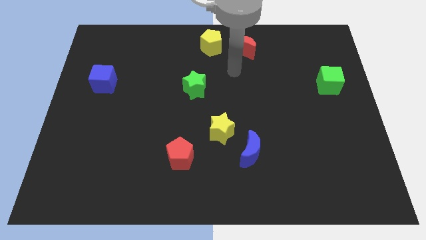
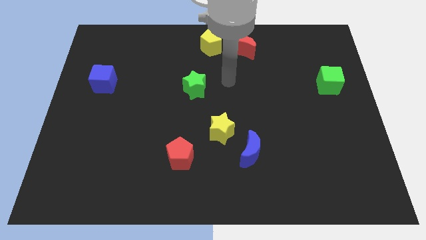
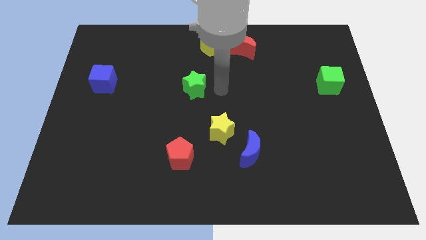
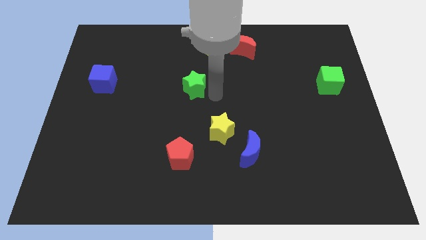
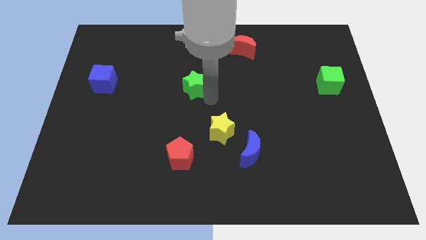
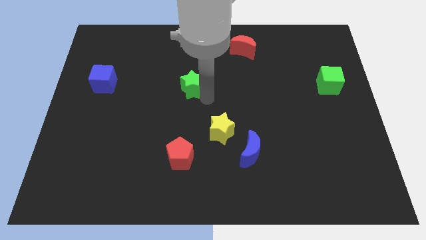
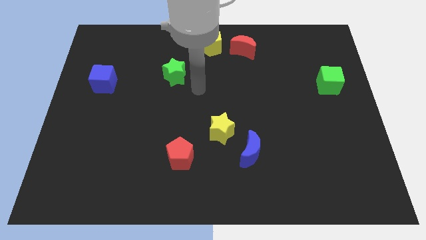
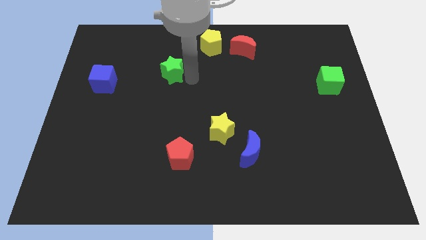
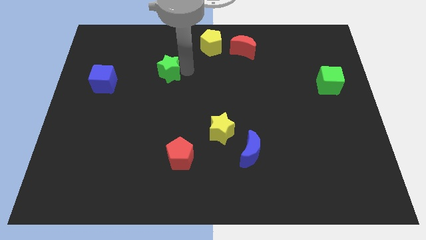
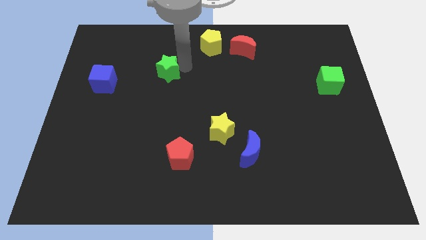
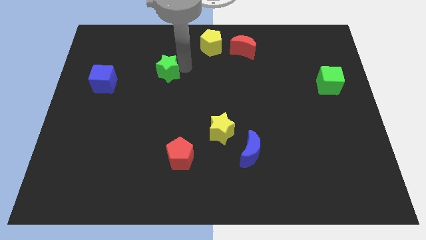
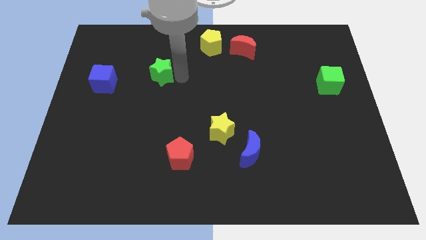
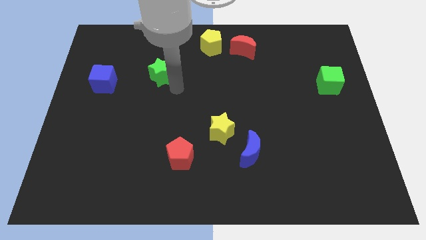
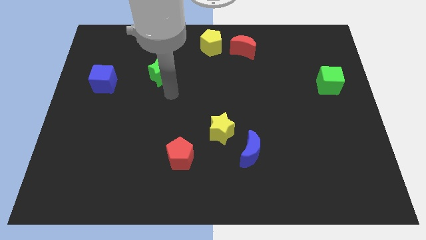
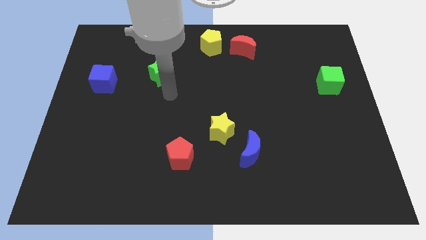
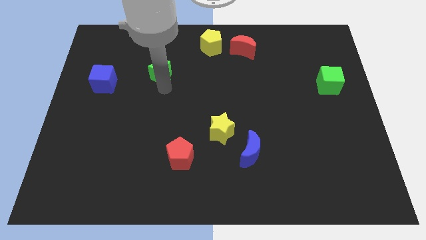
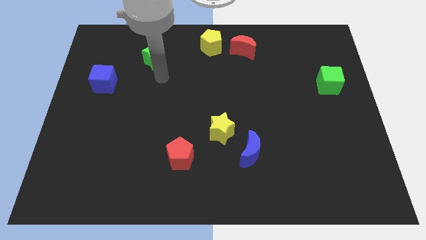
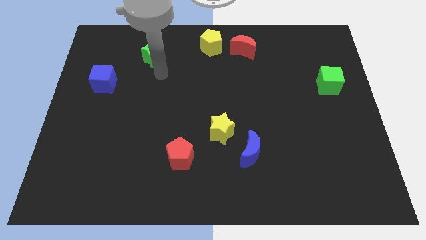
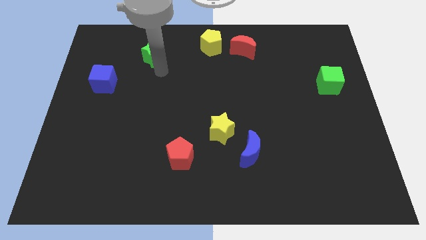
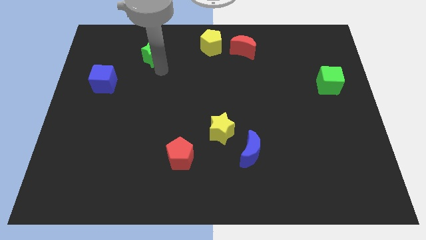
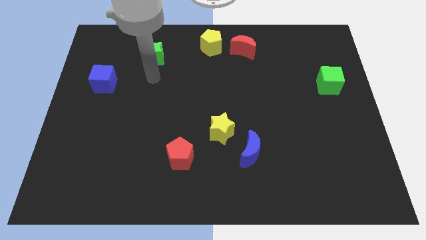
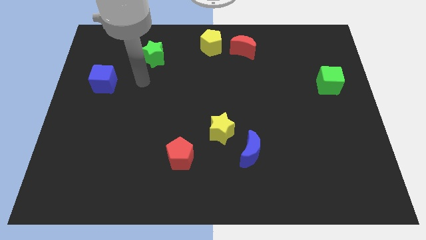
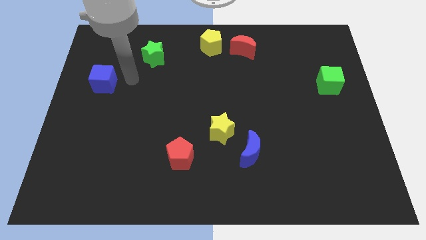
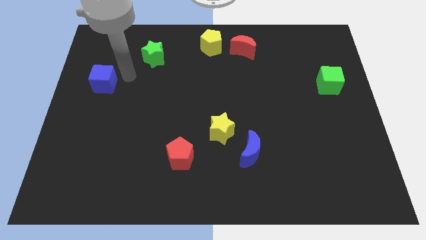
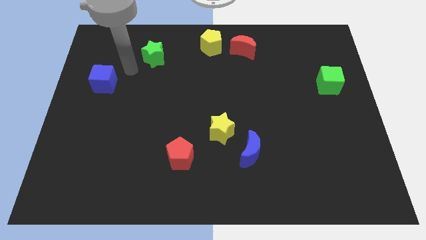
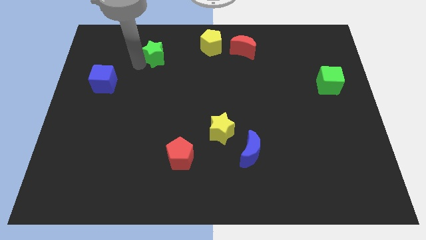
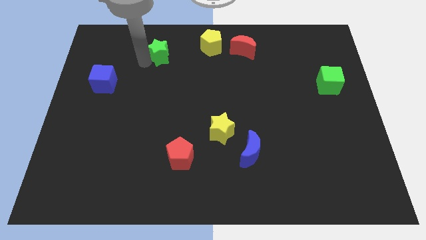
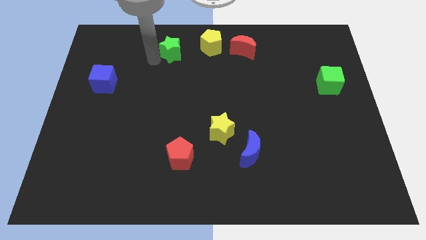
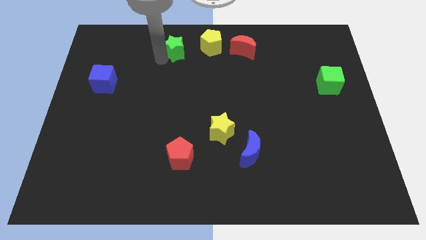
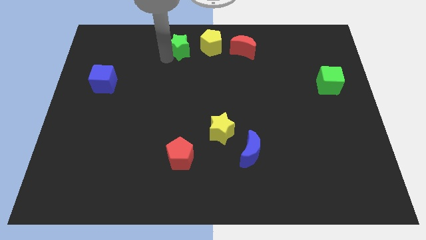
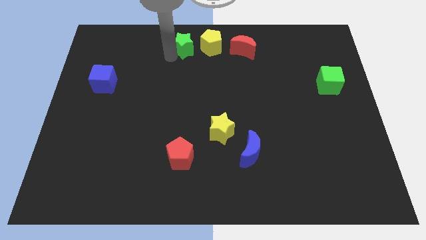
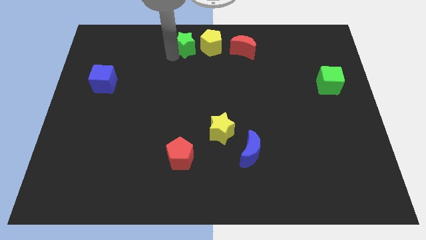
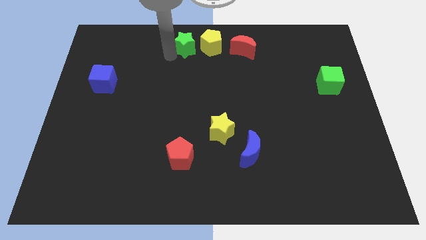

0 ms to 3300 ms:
push the green star left to the yellow pentagon

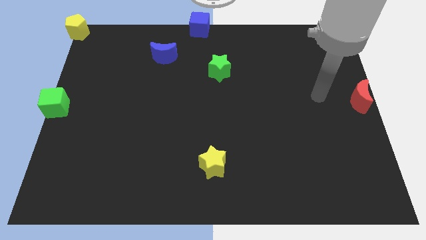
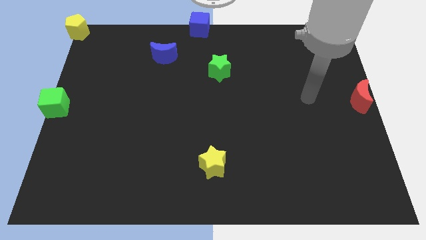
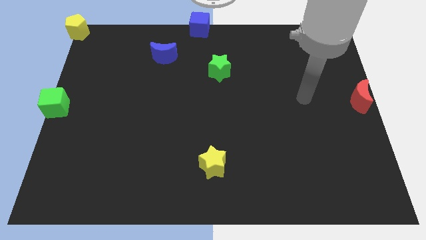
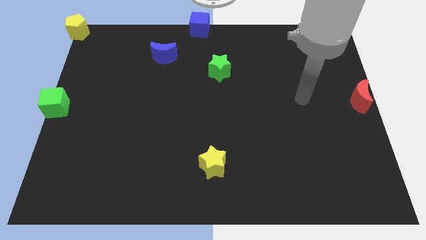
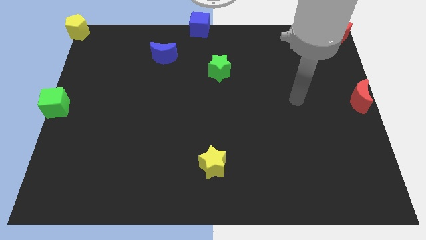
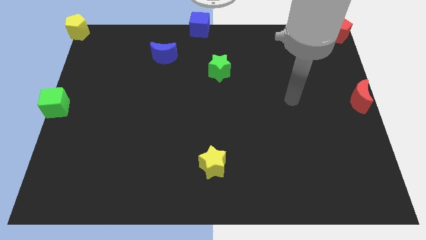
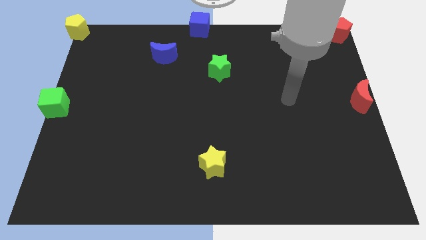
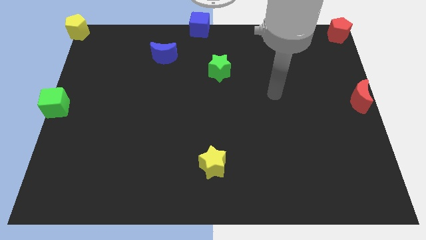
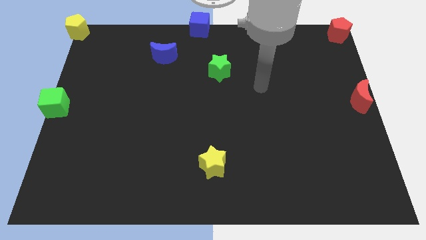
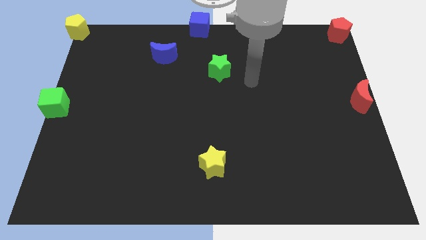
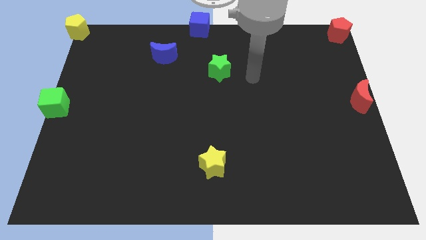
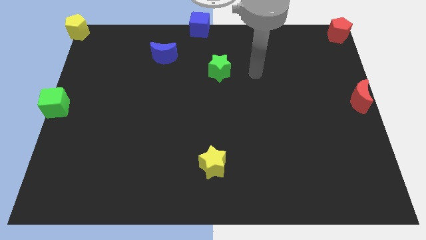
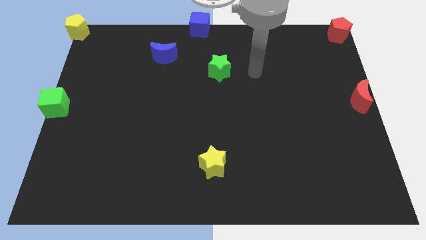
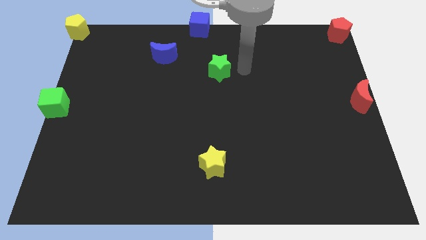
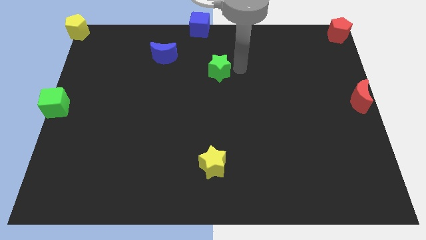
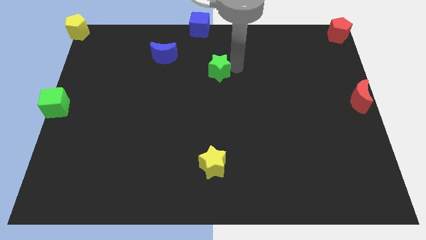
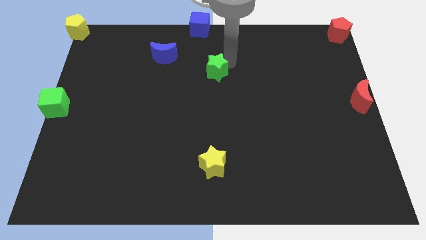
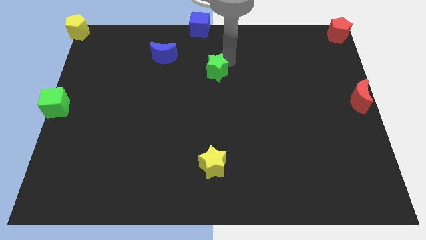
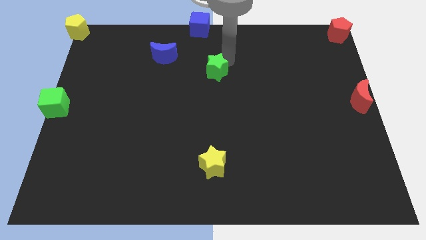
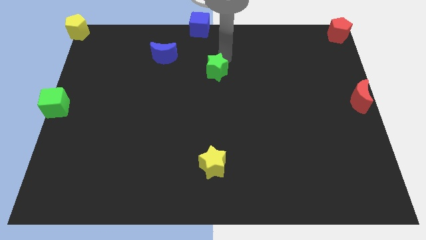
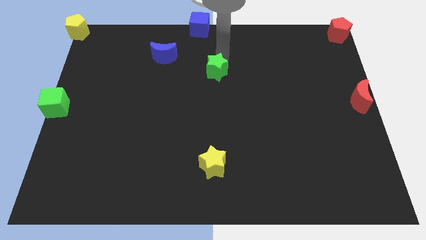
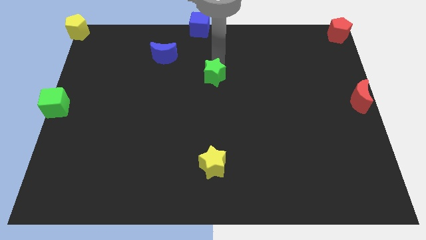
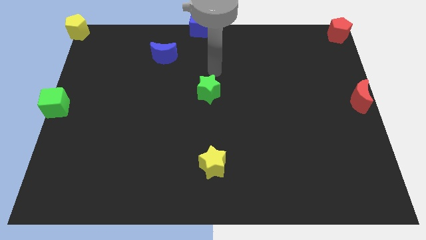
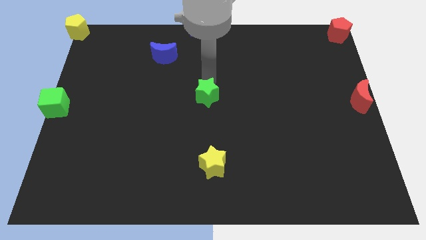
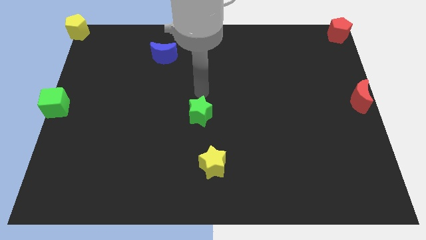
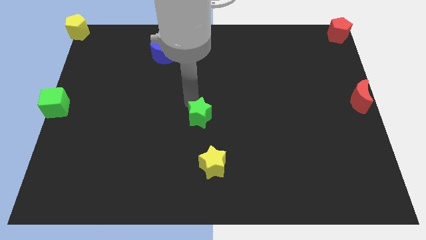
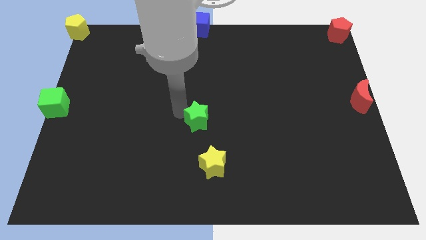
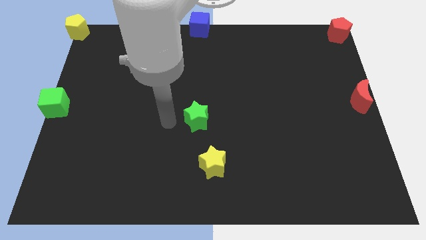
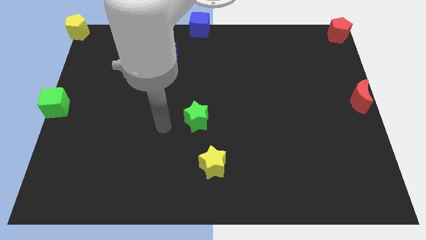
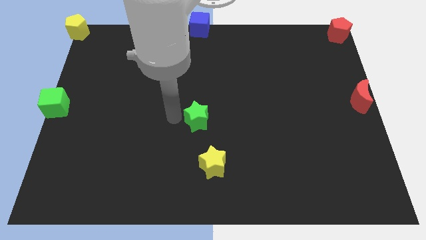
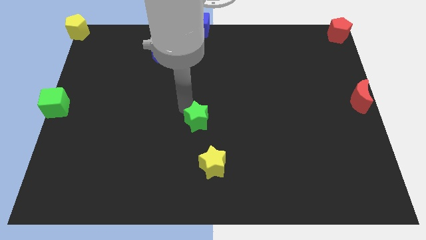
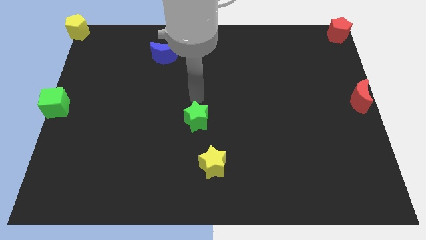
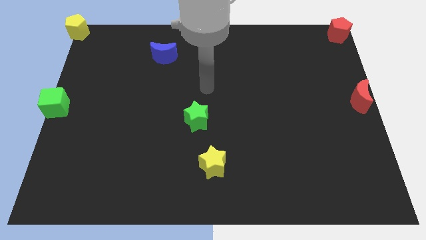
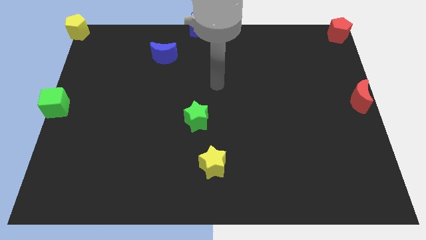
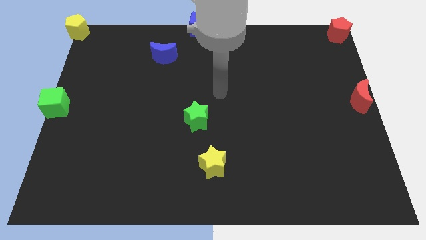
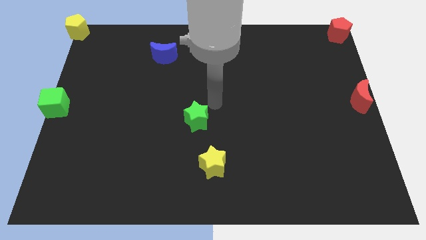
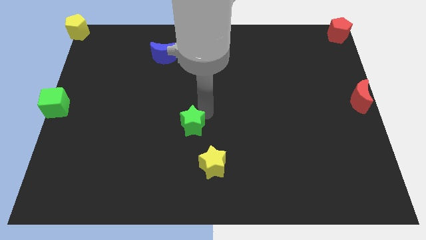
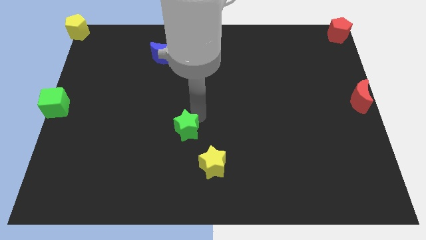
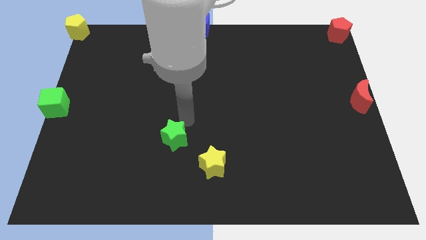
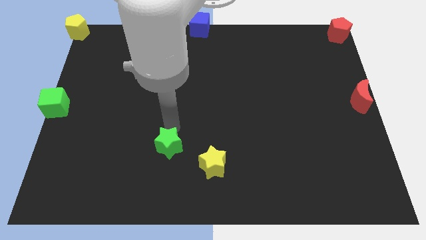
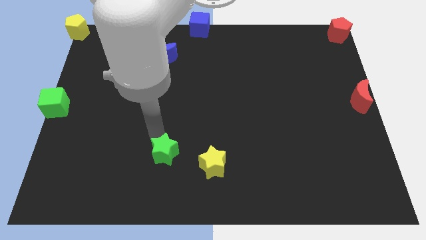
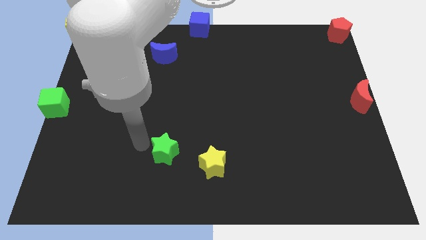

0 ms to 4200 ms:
push the green star to the left of the yellow star

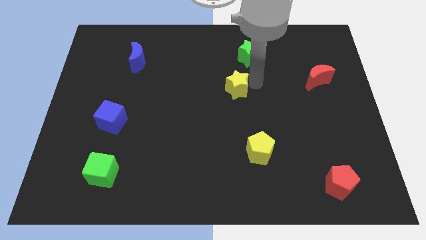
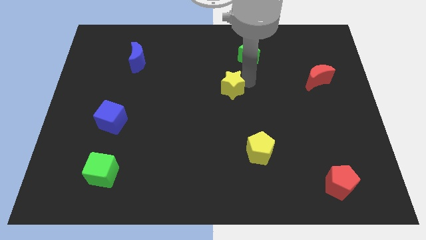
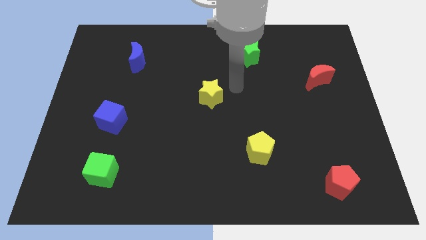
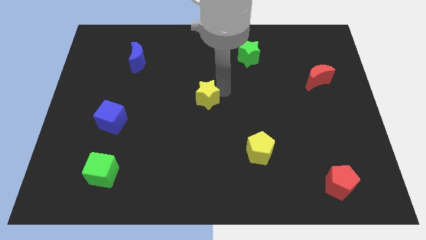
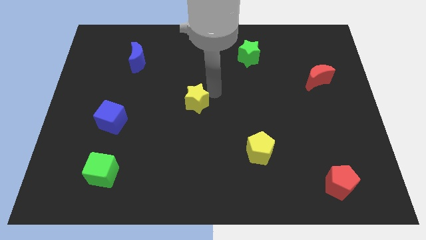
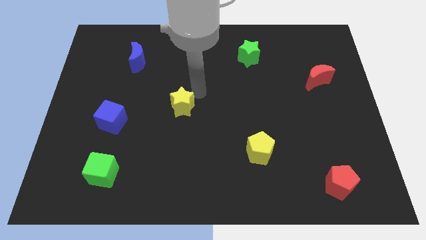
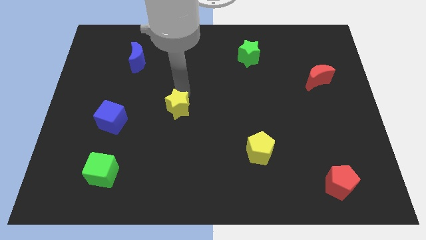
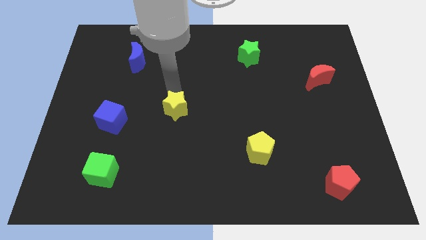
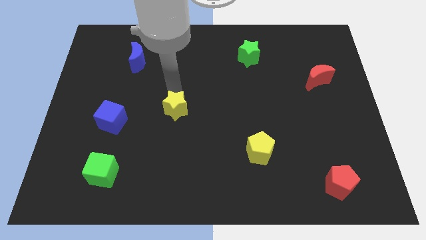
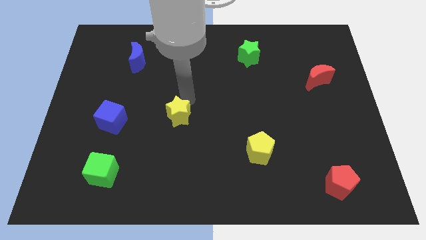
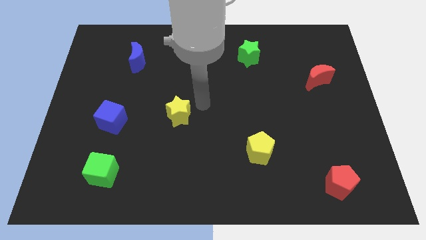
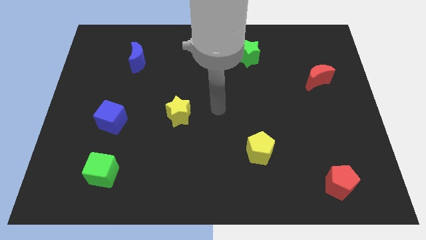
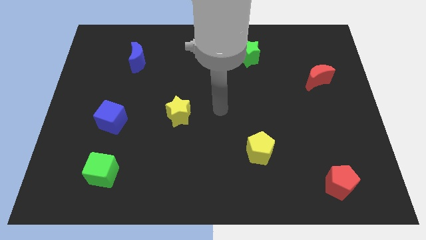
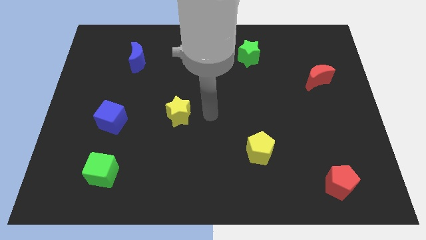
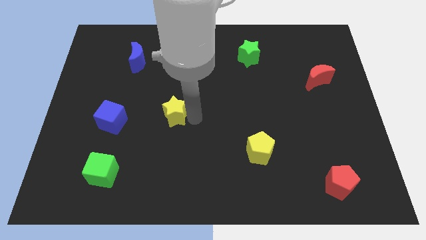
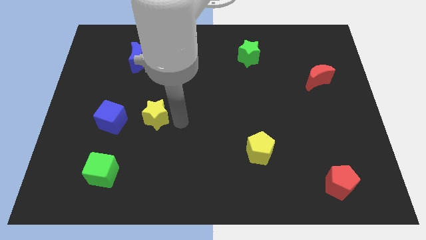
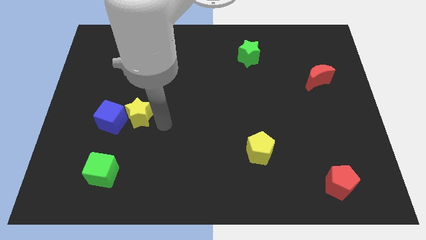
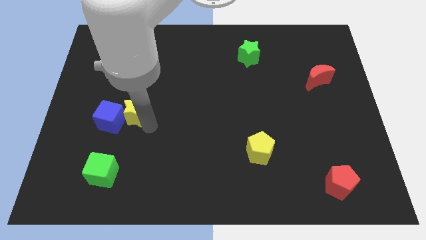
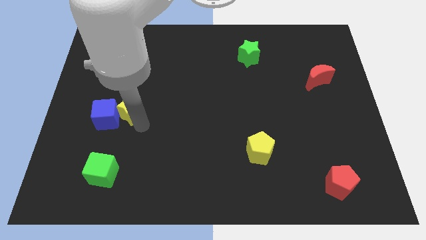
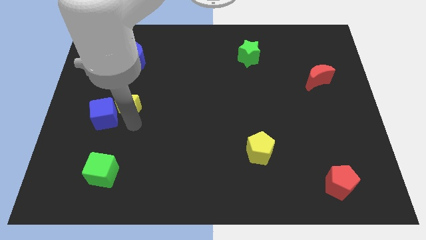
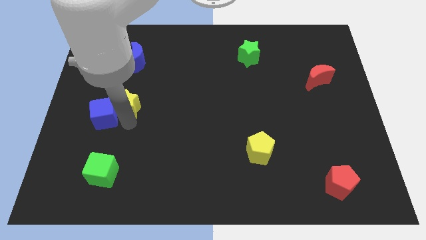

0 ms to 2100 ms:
move yellow star into blue cube
